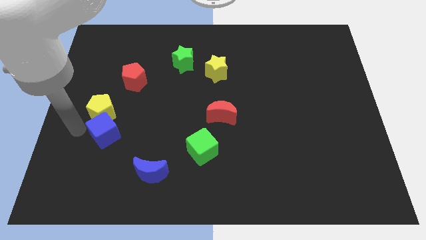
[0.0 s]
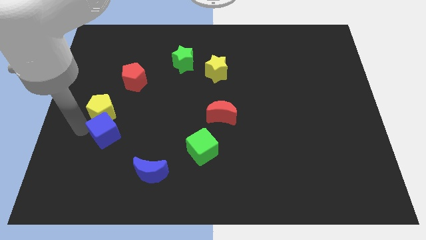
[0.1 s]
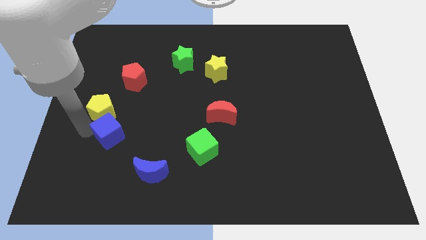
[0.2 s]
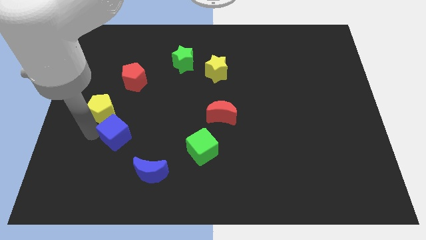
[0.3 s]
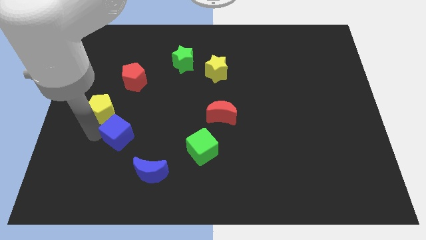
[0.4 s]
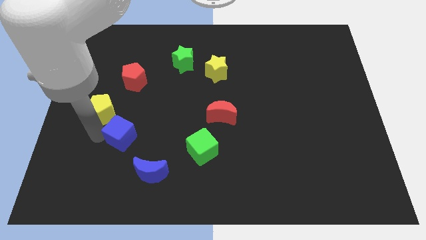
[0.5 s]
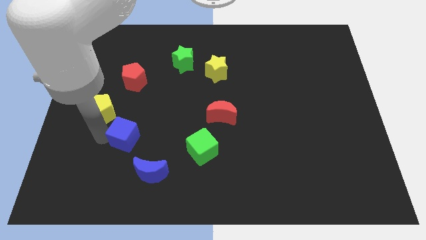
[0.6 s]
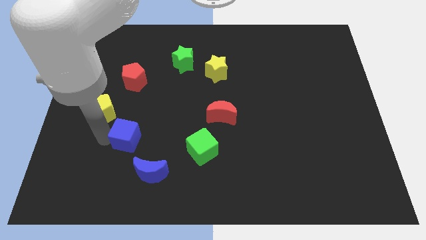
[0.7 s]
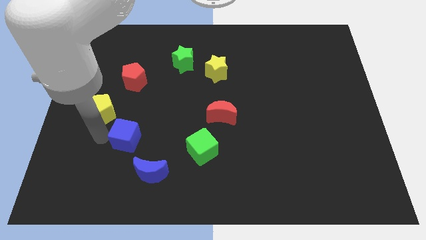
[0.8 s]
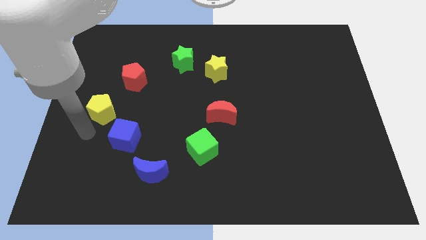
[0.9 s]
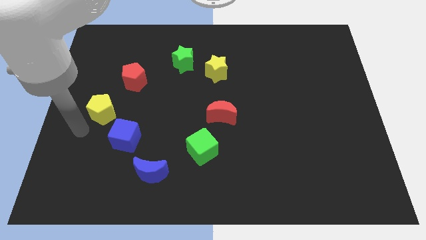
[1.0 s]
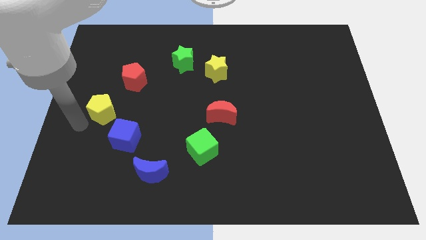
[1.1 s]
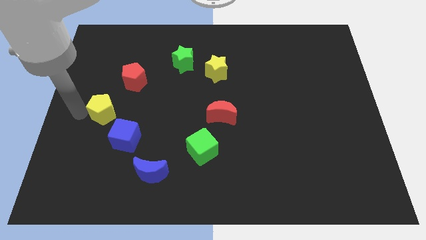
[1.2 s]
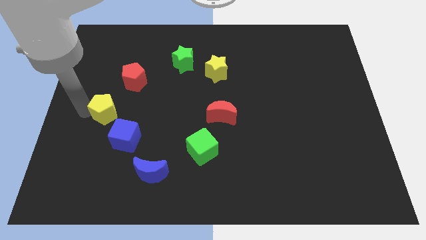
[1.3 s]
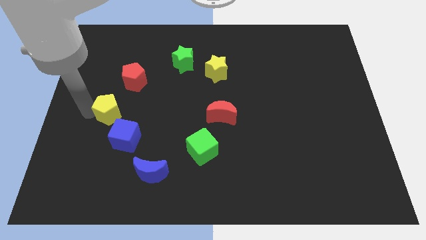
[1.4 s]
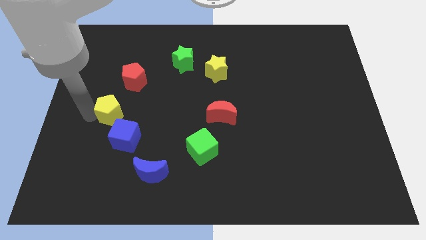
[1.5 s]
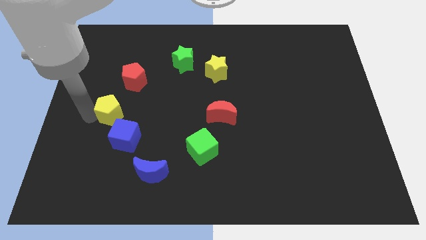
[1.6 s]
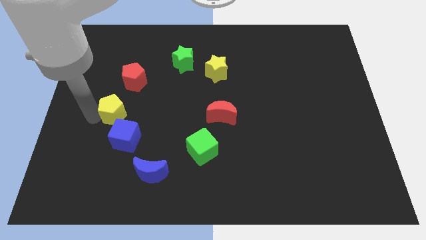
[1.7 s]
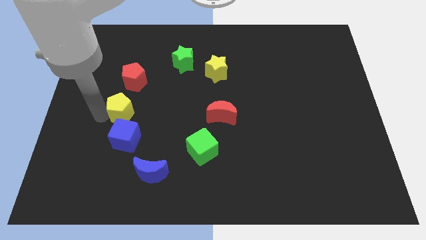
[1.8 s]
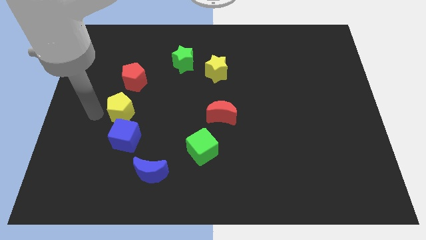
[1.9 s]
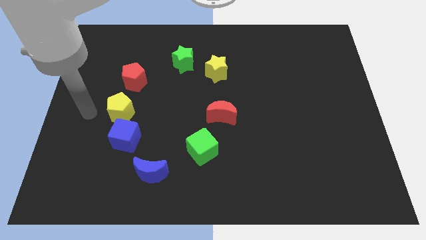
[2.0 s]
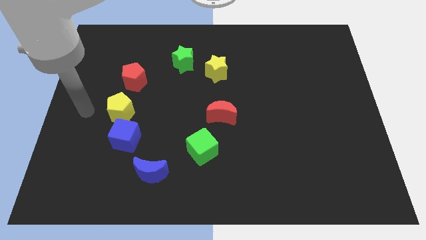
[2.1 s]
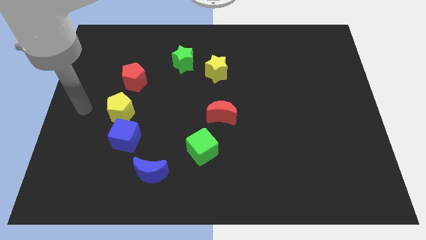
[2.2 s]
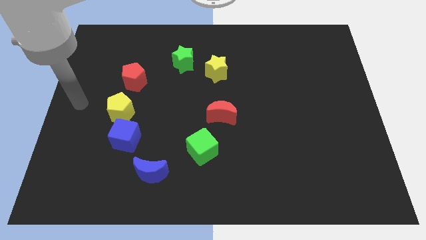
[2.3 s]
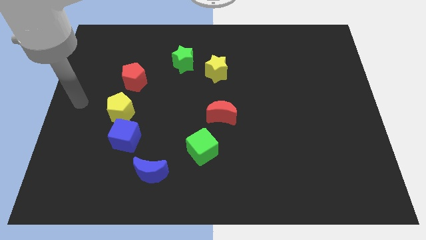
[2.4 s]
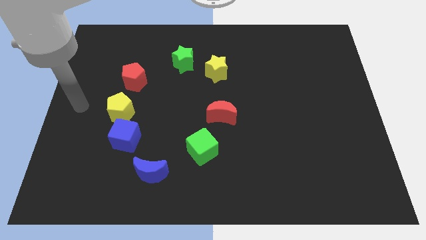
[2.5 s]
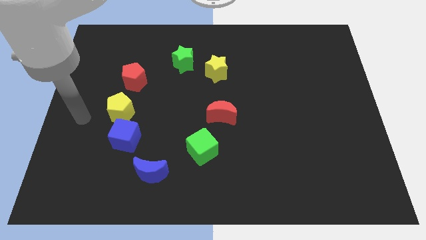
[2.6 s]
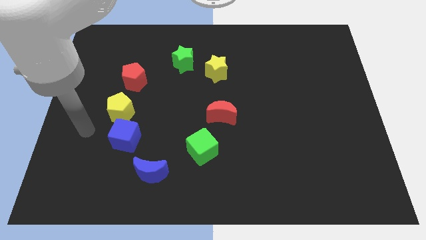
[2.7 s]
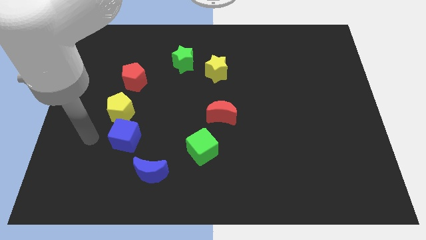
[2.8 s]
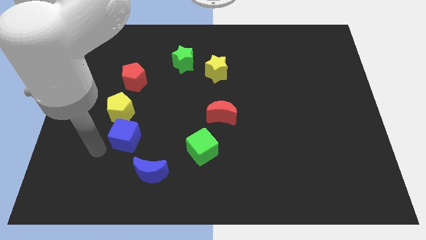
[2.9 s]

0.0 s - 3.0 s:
move blue cube slightly to the right

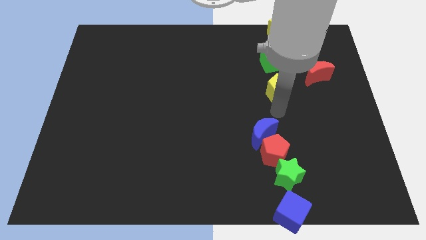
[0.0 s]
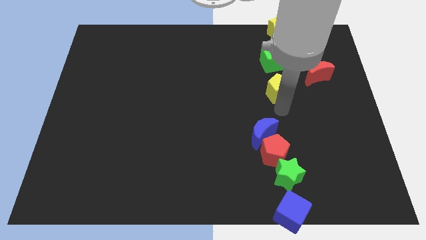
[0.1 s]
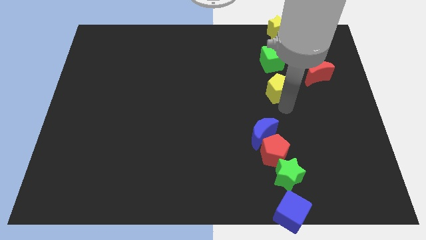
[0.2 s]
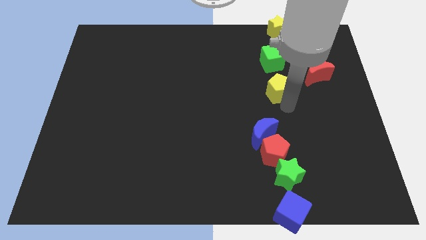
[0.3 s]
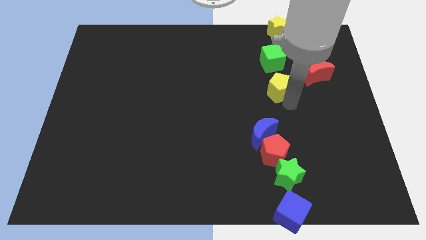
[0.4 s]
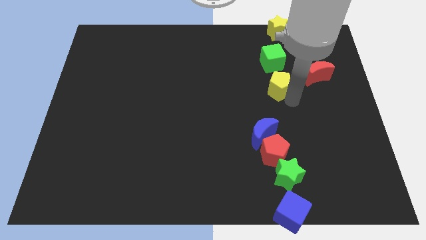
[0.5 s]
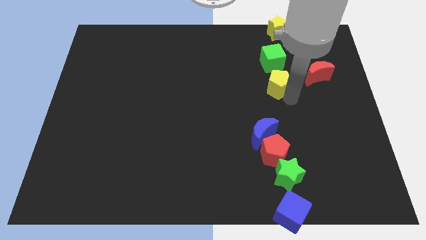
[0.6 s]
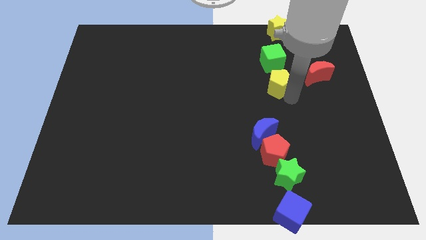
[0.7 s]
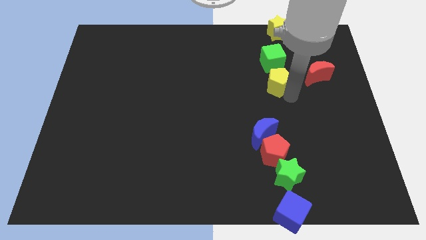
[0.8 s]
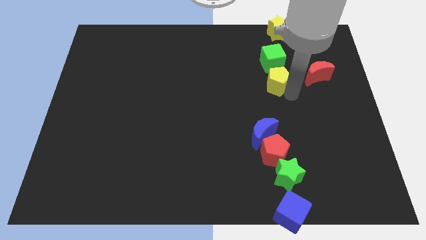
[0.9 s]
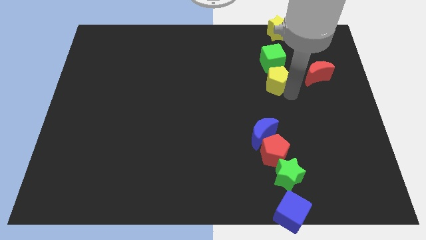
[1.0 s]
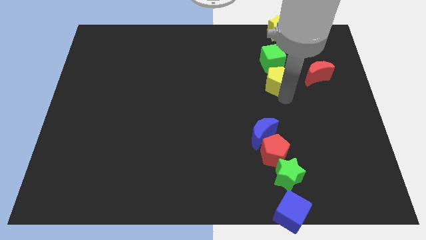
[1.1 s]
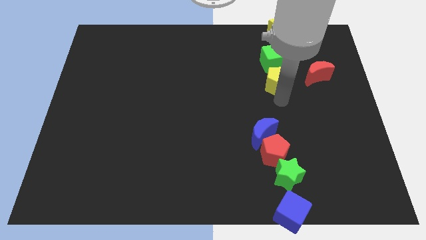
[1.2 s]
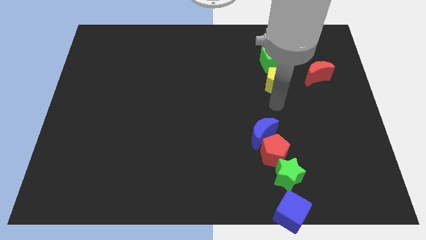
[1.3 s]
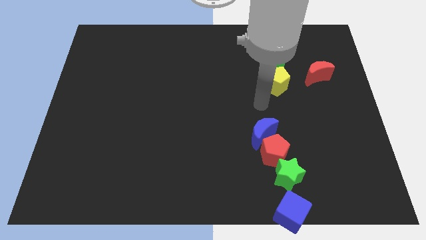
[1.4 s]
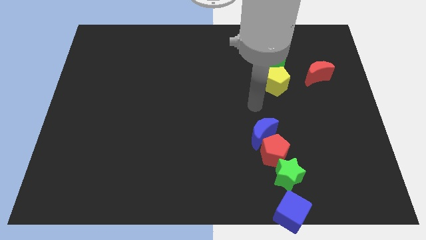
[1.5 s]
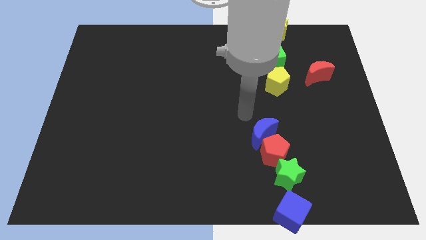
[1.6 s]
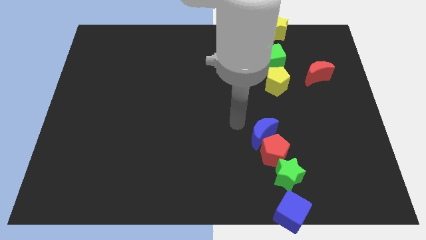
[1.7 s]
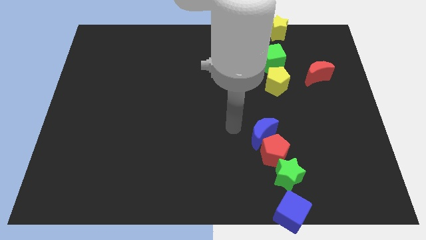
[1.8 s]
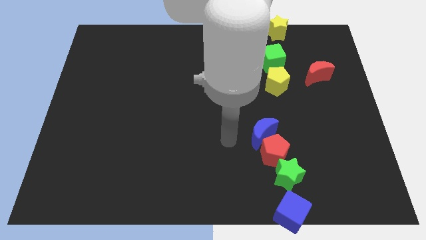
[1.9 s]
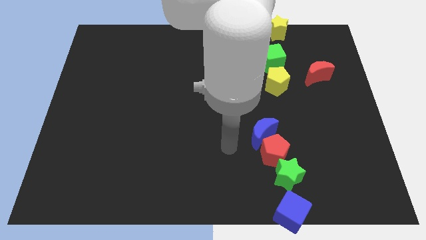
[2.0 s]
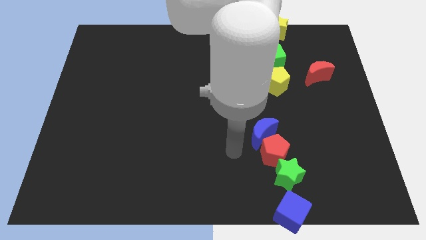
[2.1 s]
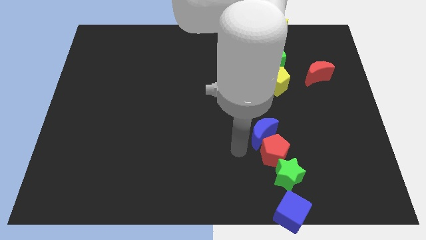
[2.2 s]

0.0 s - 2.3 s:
push the yellow pentagon into green cube

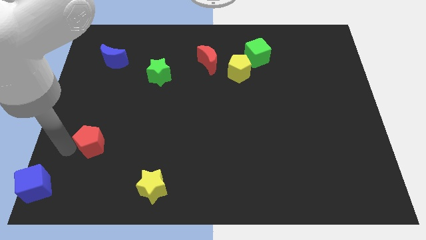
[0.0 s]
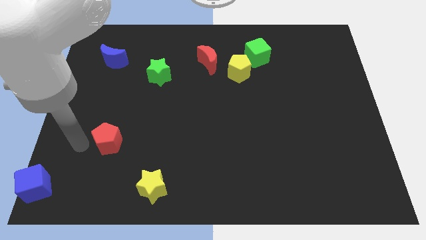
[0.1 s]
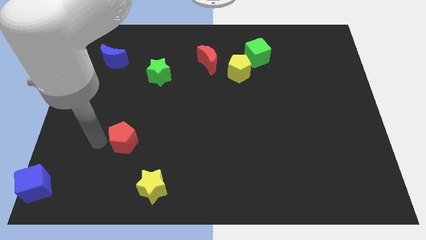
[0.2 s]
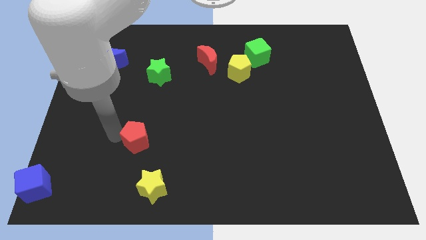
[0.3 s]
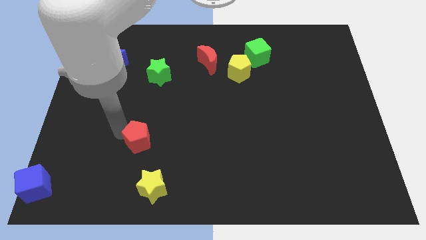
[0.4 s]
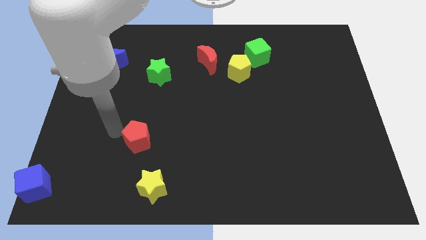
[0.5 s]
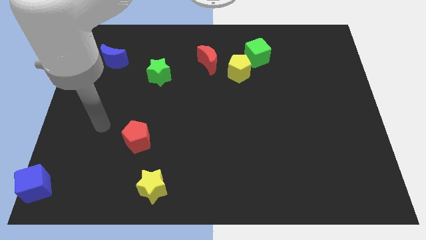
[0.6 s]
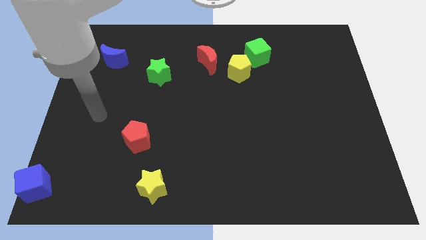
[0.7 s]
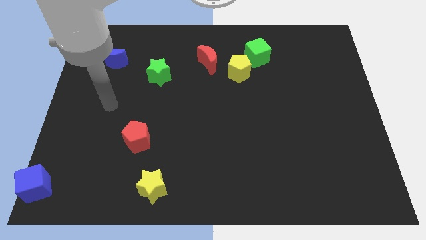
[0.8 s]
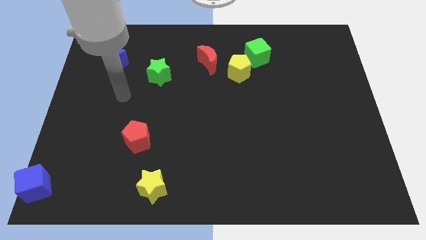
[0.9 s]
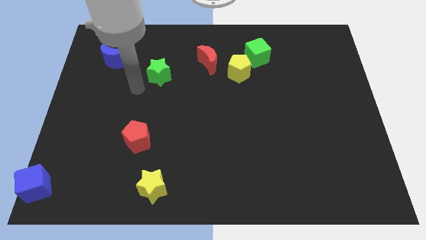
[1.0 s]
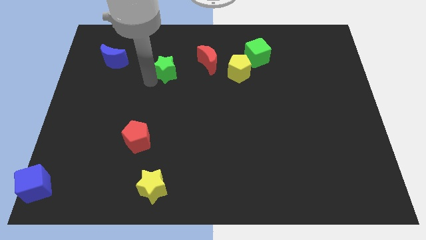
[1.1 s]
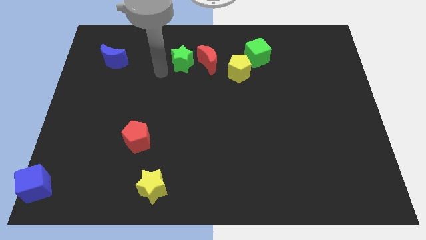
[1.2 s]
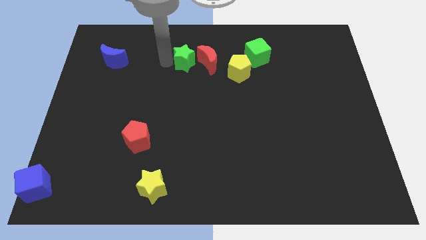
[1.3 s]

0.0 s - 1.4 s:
move the green star near to the red moon

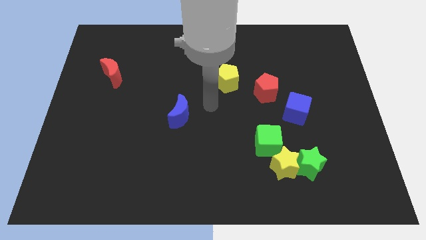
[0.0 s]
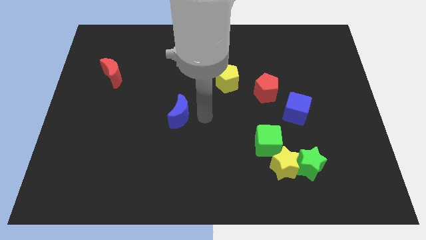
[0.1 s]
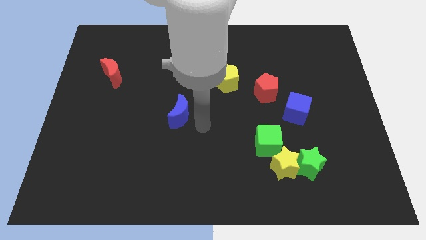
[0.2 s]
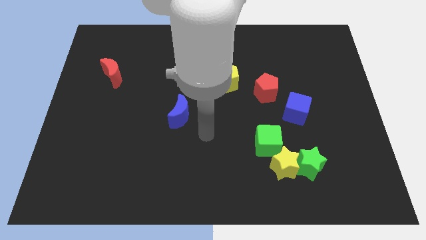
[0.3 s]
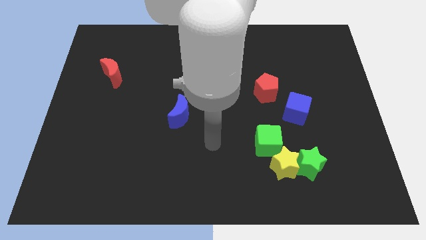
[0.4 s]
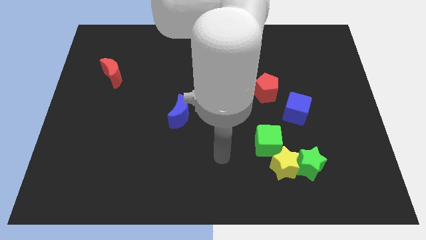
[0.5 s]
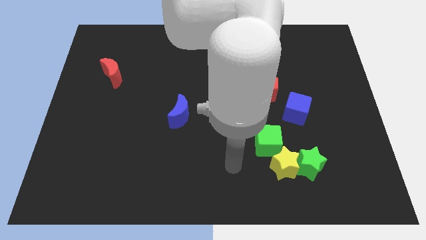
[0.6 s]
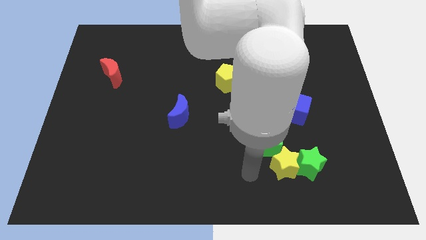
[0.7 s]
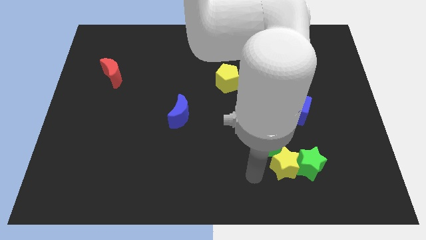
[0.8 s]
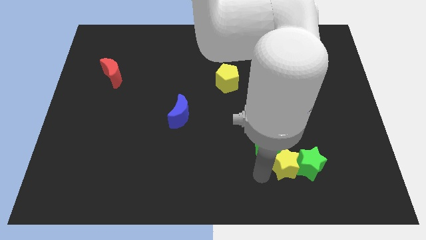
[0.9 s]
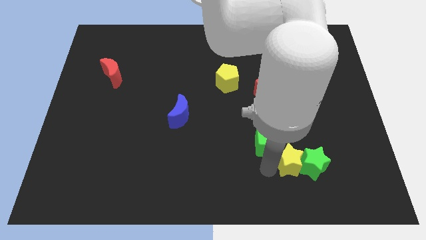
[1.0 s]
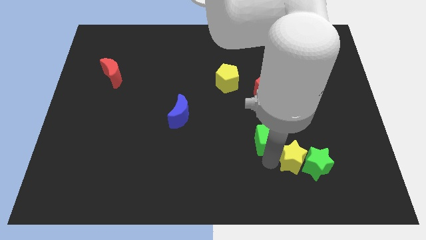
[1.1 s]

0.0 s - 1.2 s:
push the yellow star into the green star

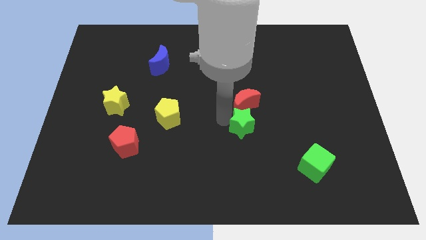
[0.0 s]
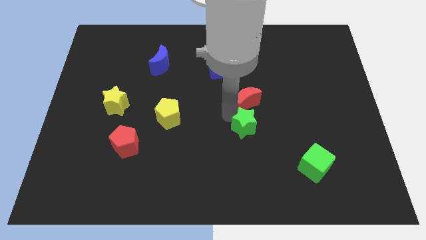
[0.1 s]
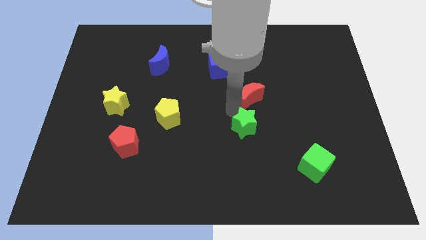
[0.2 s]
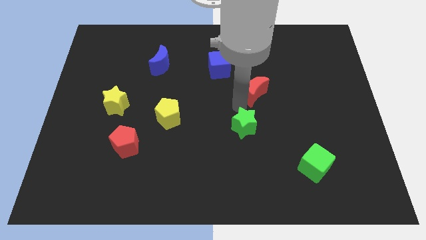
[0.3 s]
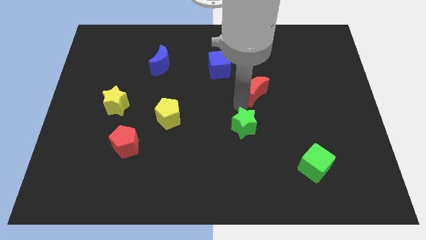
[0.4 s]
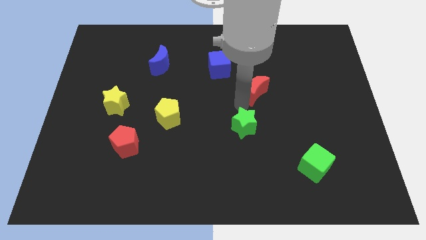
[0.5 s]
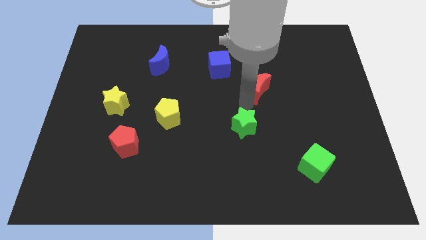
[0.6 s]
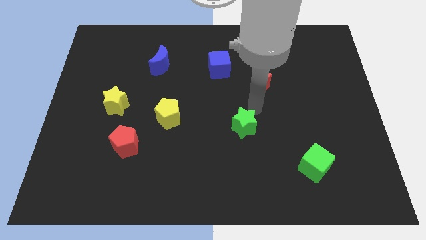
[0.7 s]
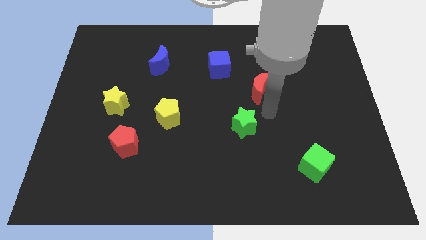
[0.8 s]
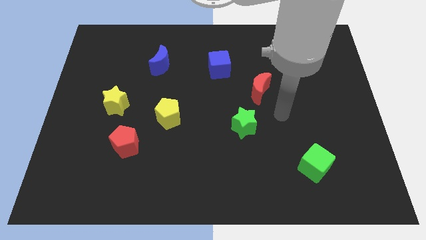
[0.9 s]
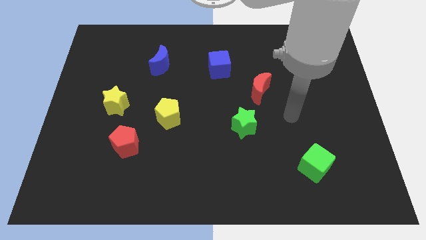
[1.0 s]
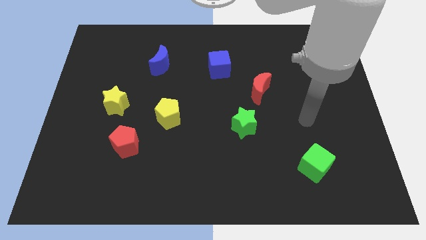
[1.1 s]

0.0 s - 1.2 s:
separate the red crescent from the green star
